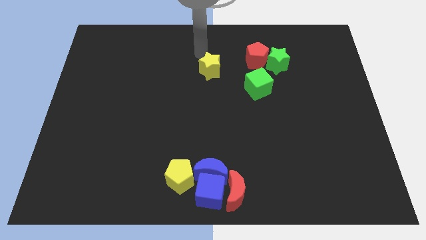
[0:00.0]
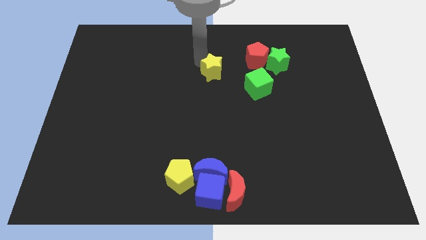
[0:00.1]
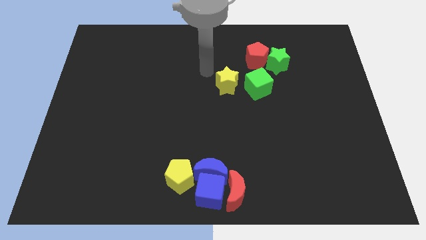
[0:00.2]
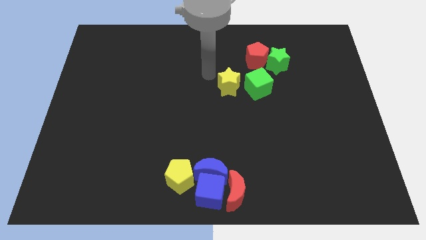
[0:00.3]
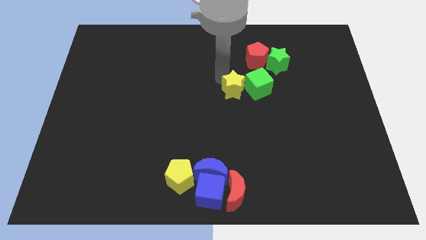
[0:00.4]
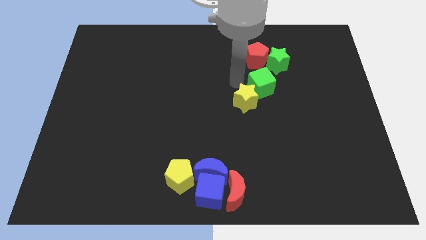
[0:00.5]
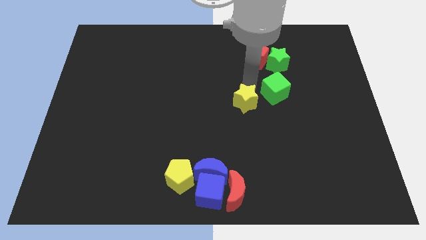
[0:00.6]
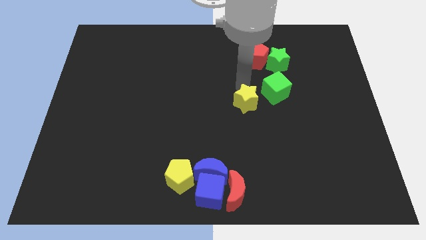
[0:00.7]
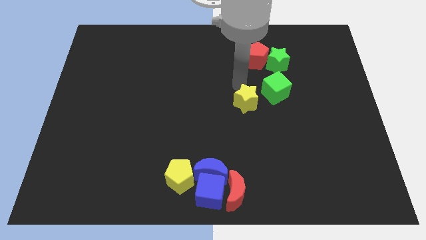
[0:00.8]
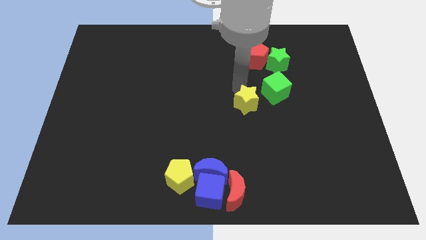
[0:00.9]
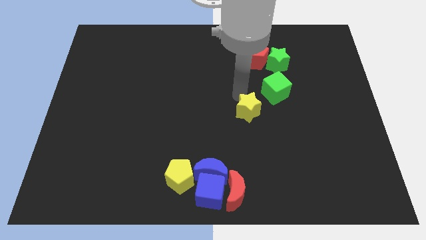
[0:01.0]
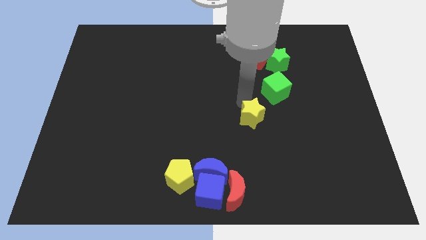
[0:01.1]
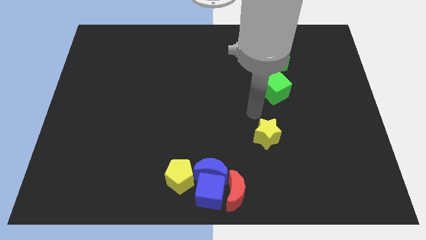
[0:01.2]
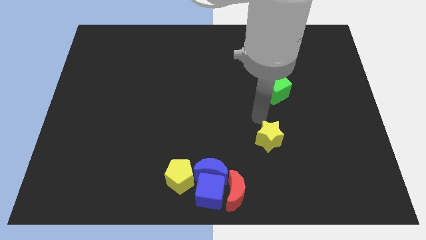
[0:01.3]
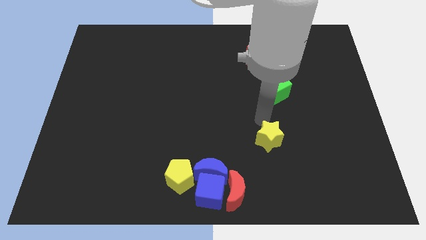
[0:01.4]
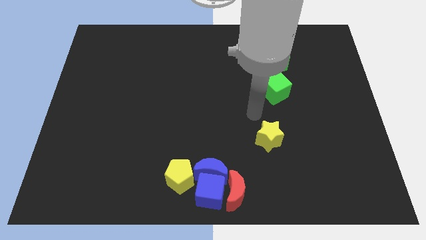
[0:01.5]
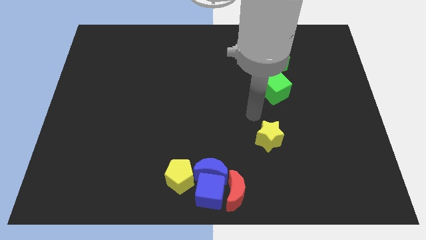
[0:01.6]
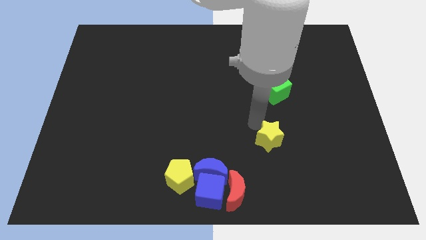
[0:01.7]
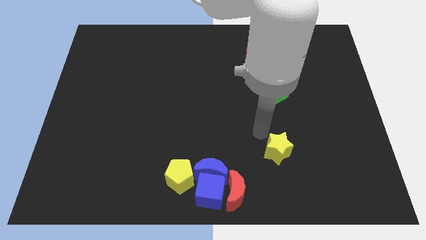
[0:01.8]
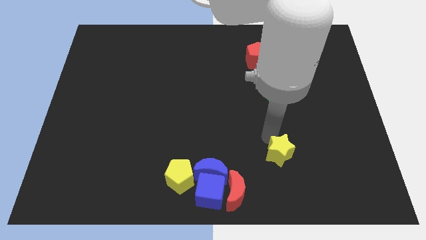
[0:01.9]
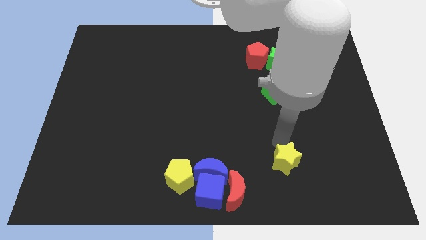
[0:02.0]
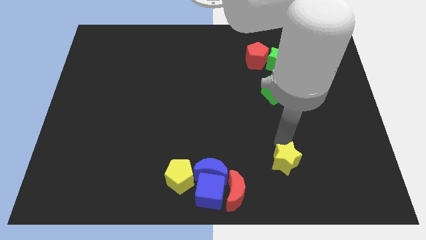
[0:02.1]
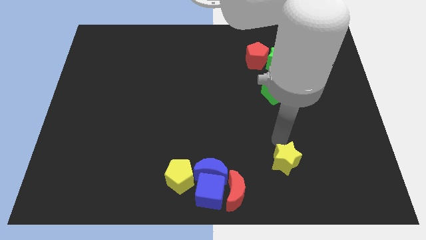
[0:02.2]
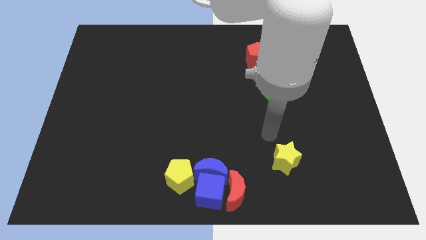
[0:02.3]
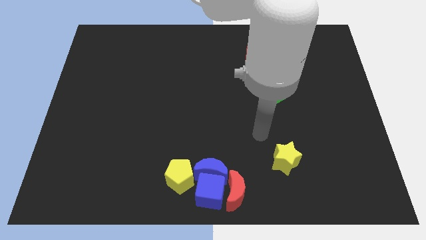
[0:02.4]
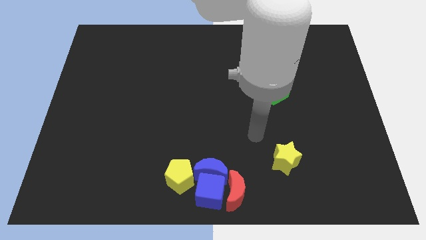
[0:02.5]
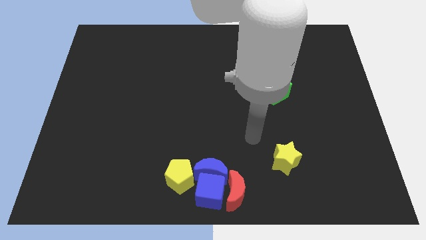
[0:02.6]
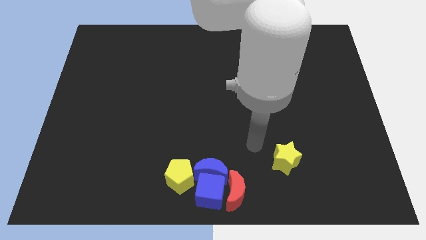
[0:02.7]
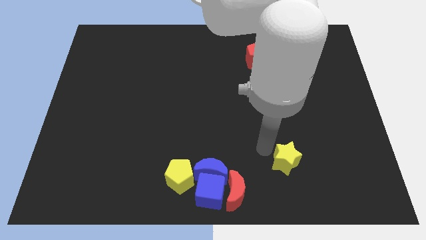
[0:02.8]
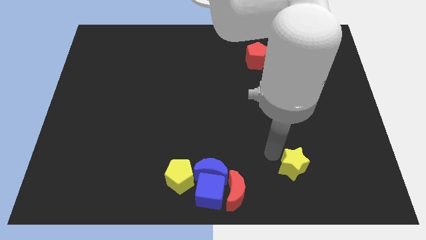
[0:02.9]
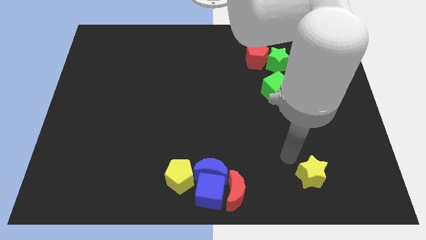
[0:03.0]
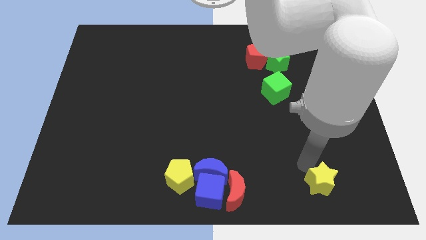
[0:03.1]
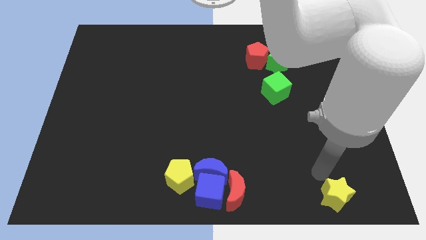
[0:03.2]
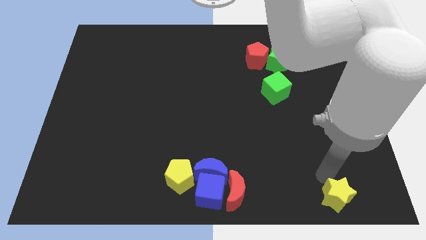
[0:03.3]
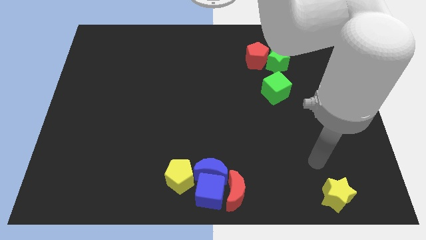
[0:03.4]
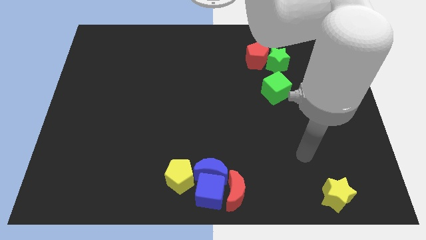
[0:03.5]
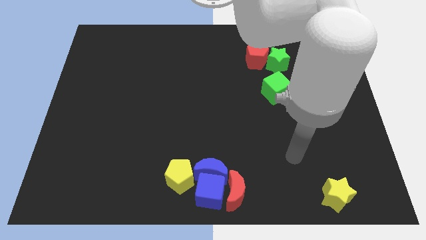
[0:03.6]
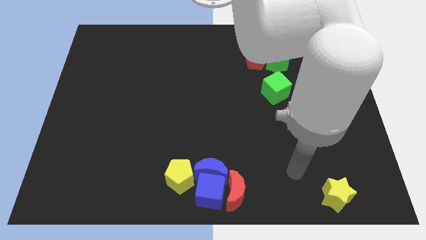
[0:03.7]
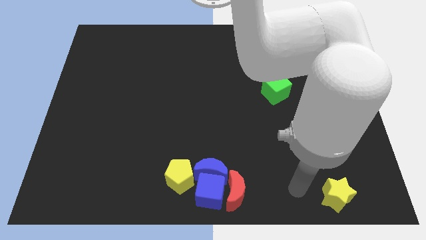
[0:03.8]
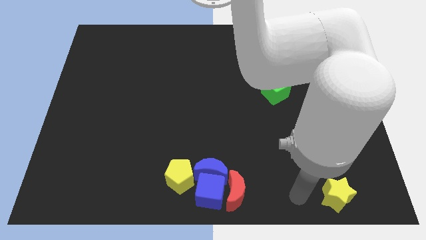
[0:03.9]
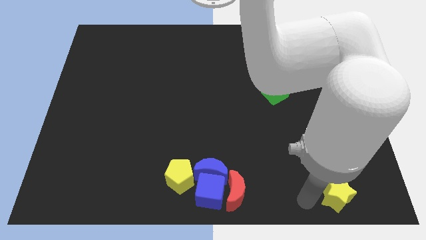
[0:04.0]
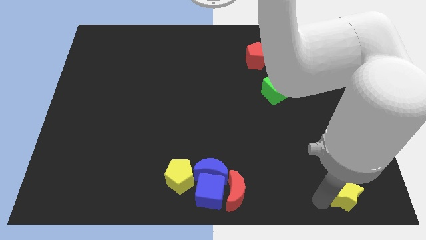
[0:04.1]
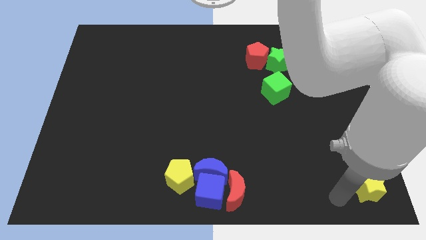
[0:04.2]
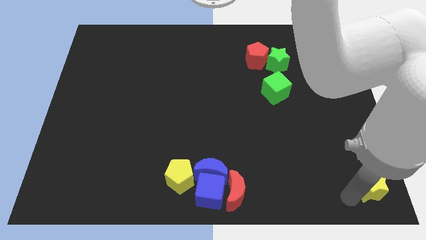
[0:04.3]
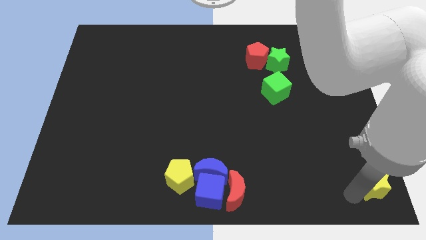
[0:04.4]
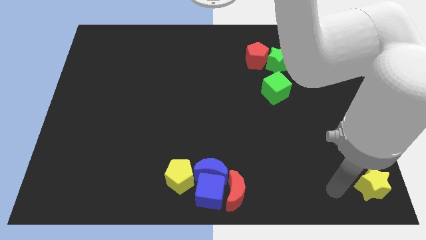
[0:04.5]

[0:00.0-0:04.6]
push the yellow star to the bottom right corner of the board

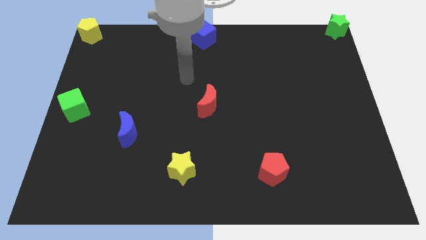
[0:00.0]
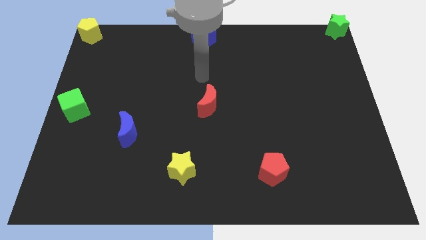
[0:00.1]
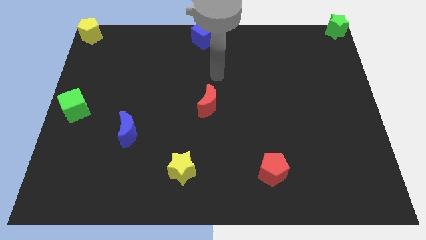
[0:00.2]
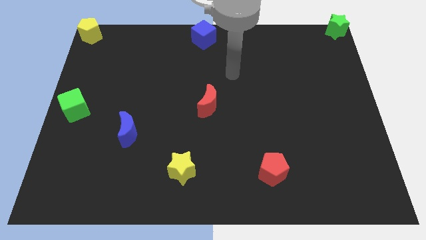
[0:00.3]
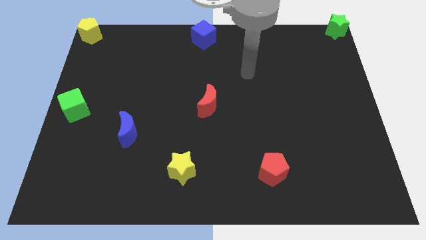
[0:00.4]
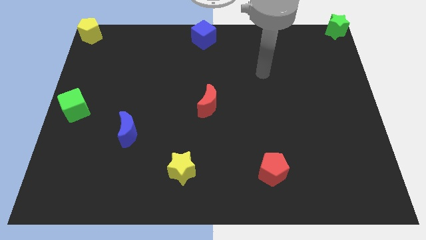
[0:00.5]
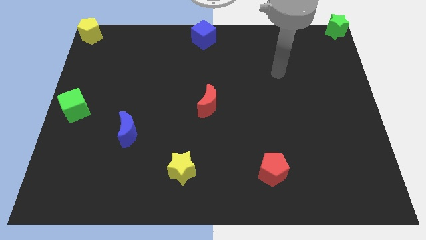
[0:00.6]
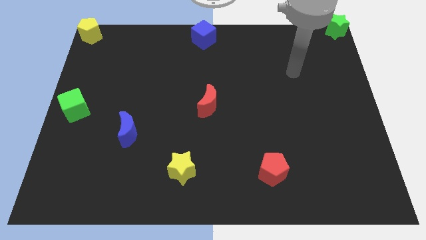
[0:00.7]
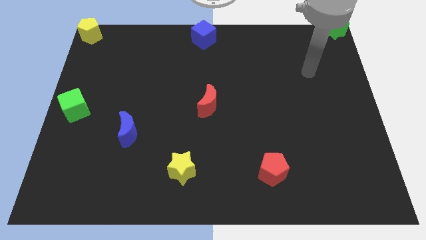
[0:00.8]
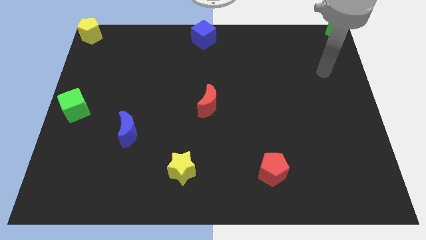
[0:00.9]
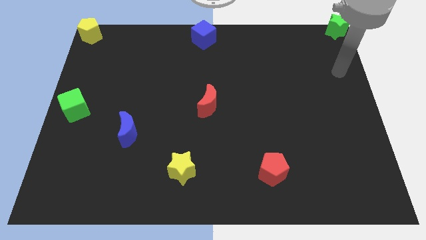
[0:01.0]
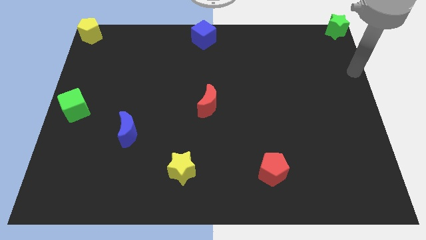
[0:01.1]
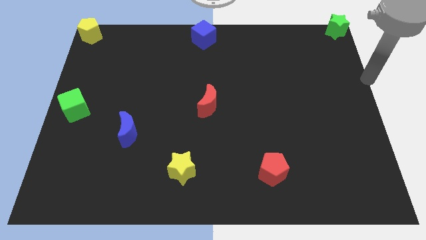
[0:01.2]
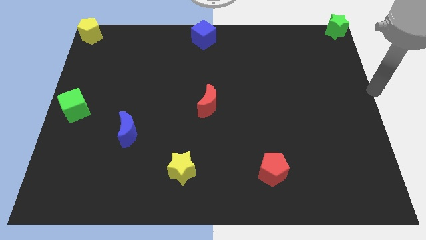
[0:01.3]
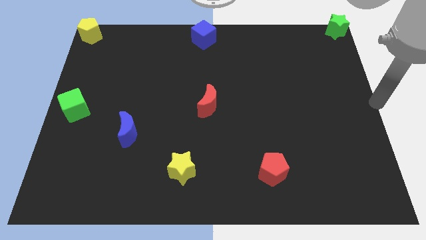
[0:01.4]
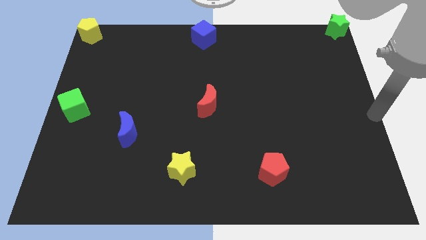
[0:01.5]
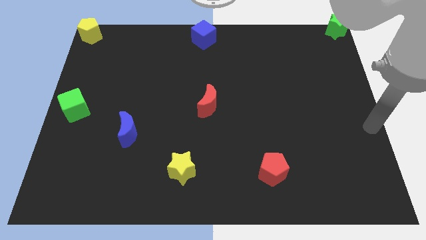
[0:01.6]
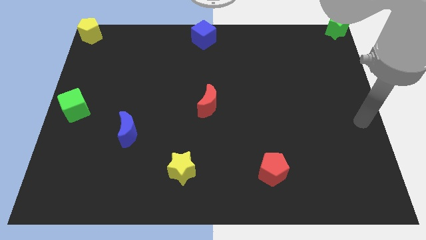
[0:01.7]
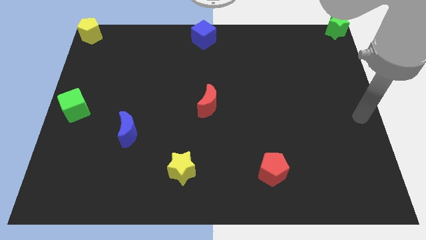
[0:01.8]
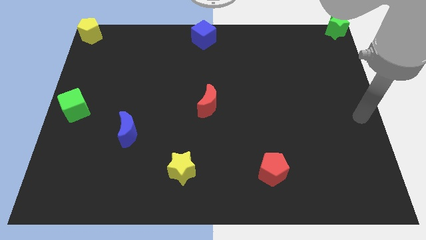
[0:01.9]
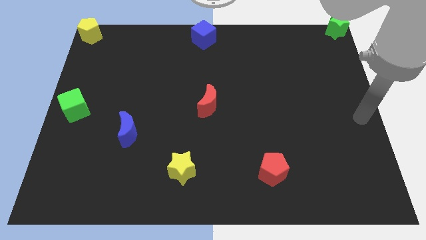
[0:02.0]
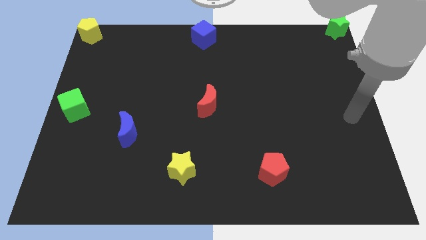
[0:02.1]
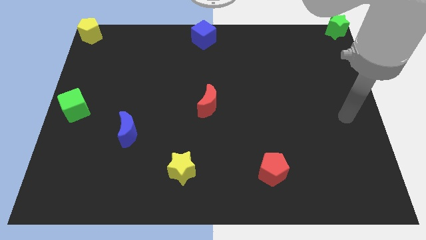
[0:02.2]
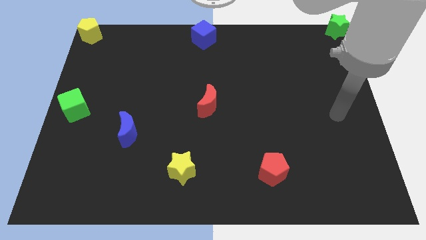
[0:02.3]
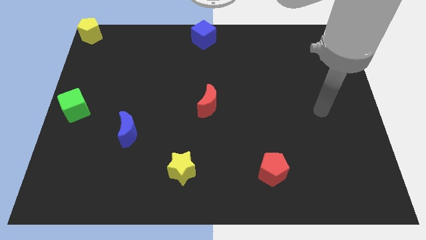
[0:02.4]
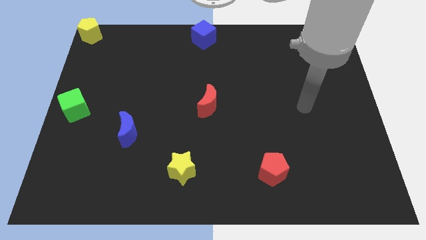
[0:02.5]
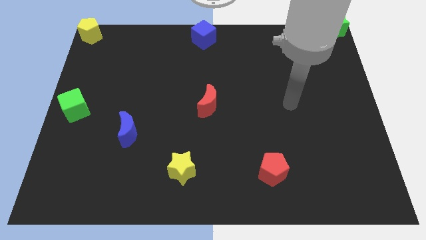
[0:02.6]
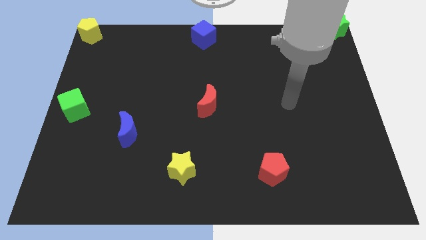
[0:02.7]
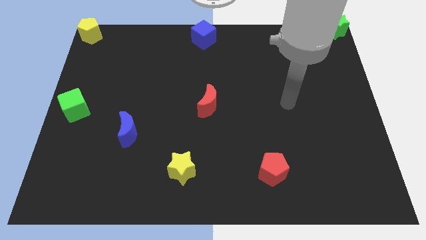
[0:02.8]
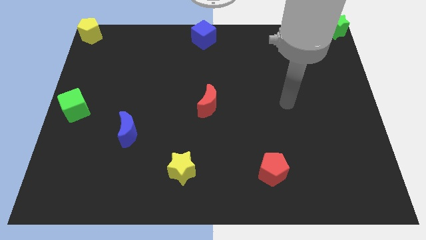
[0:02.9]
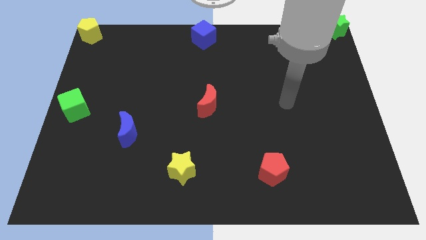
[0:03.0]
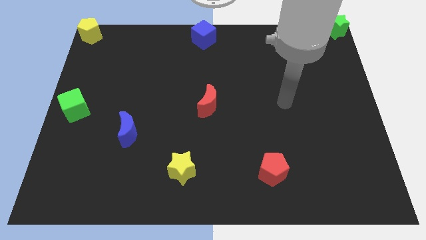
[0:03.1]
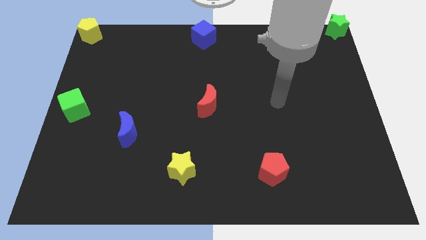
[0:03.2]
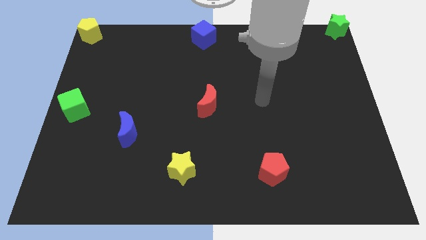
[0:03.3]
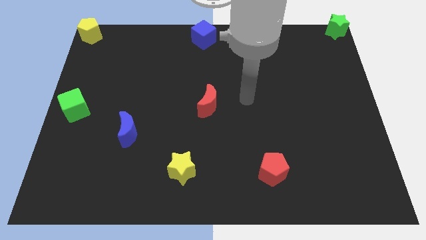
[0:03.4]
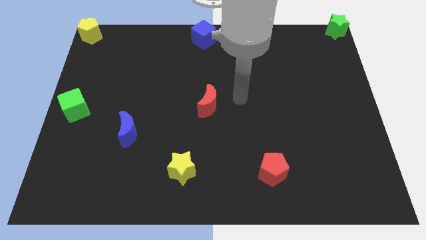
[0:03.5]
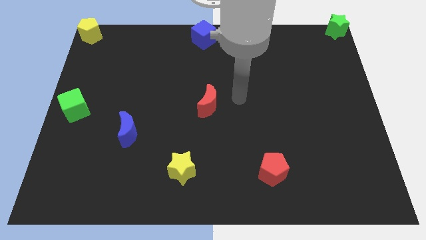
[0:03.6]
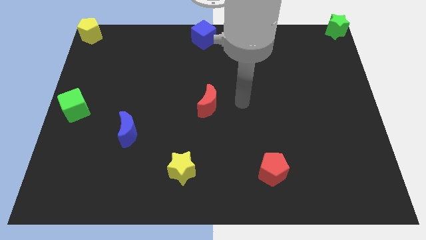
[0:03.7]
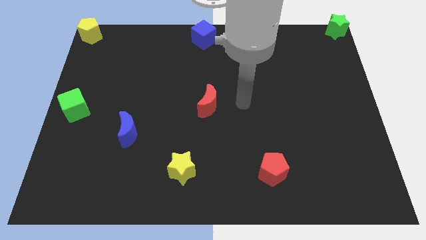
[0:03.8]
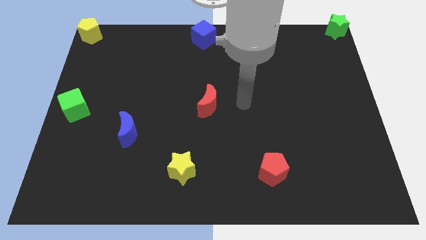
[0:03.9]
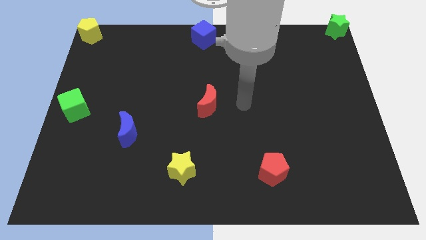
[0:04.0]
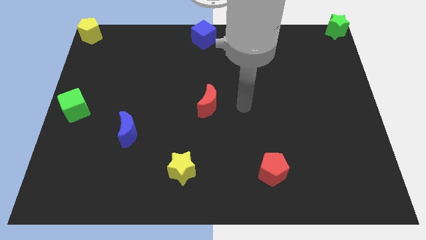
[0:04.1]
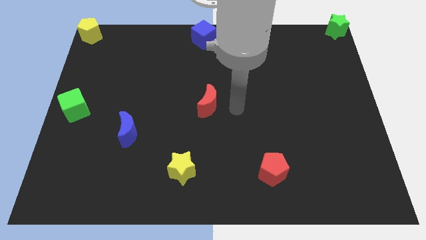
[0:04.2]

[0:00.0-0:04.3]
put your hand parallel right to the red moon
